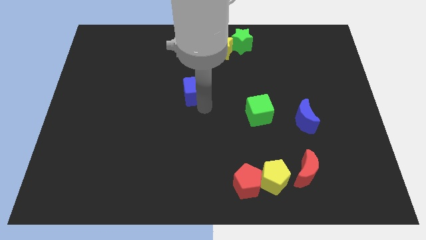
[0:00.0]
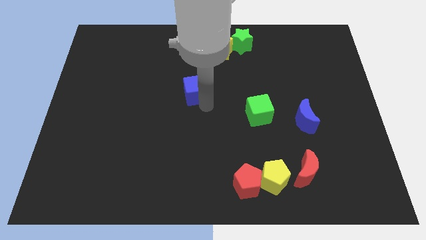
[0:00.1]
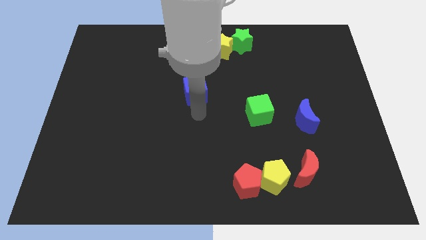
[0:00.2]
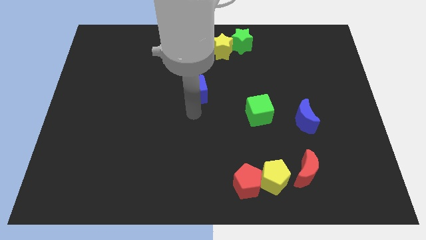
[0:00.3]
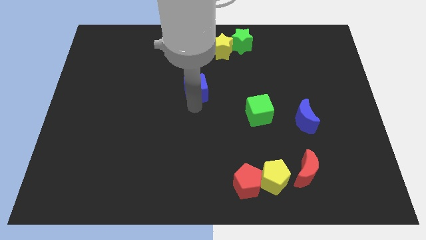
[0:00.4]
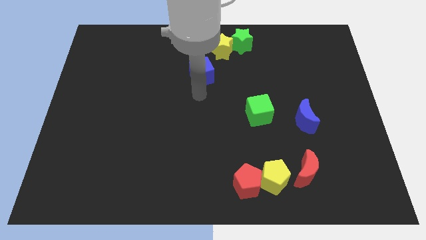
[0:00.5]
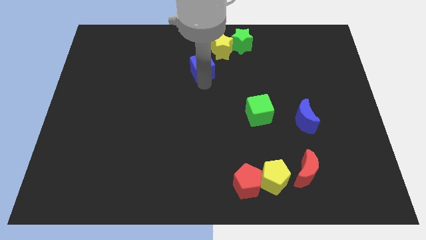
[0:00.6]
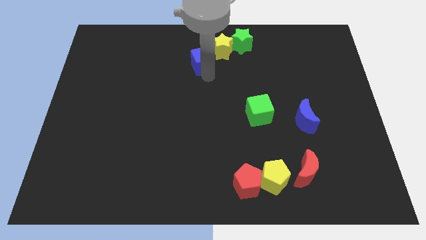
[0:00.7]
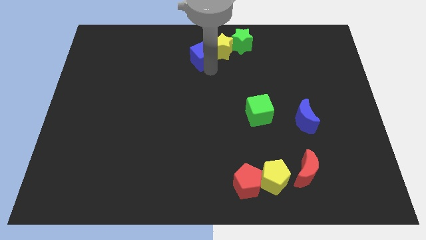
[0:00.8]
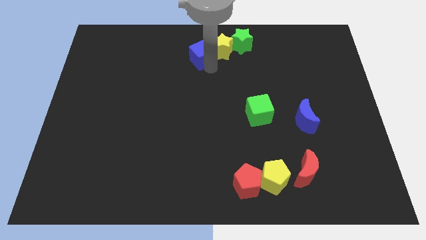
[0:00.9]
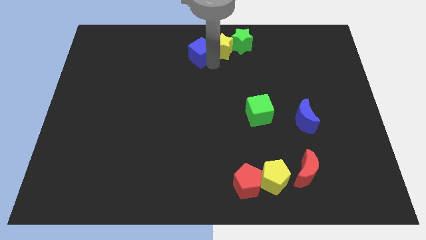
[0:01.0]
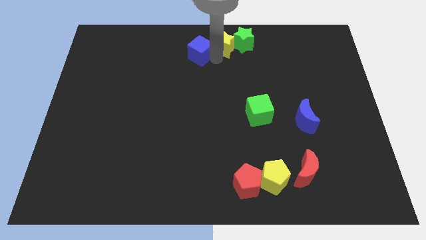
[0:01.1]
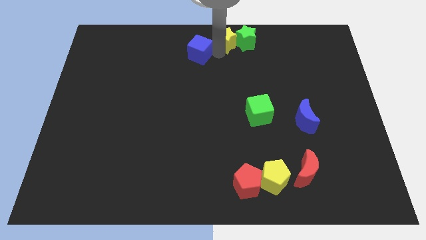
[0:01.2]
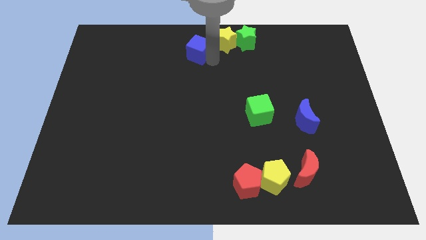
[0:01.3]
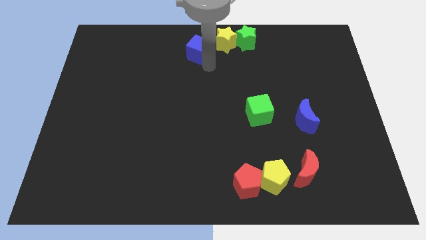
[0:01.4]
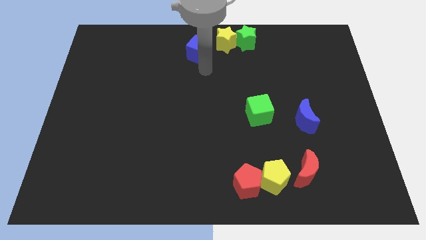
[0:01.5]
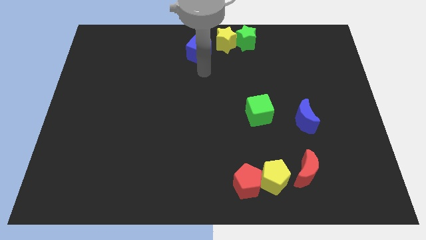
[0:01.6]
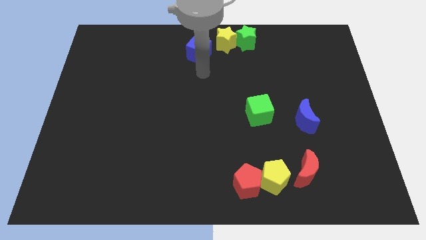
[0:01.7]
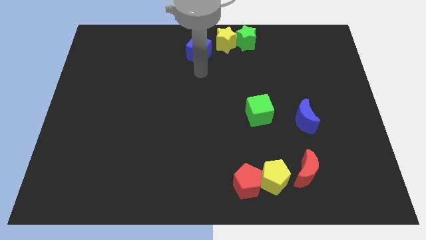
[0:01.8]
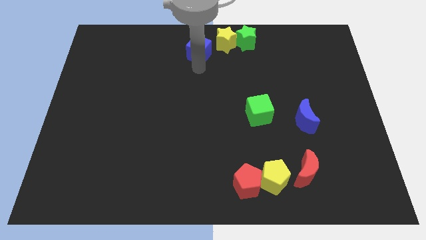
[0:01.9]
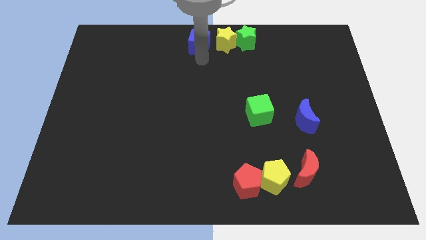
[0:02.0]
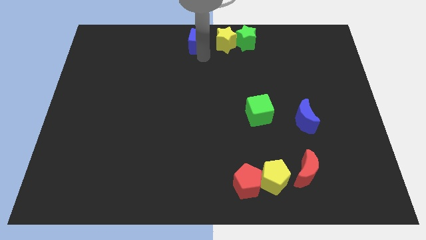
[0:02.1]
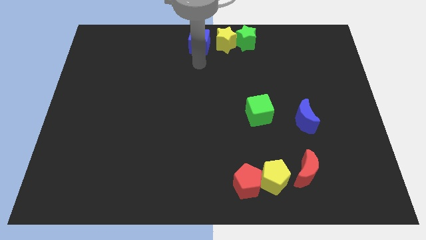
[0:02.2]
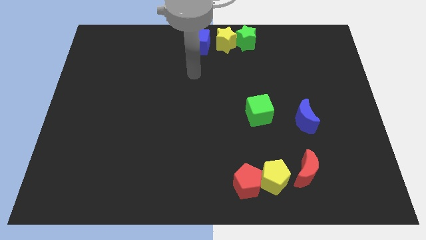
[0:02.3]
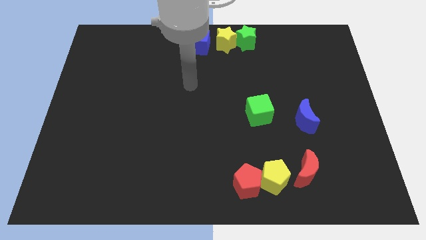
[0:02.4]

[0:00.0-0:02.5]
place the blue cube left to the yellow star

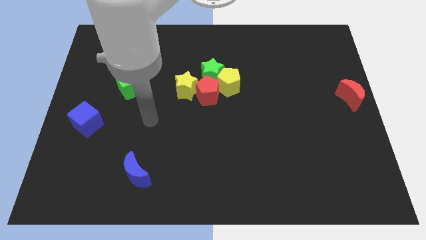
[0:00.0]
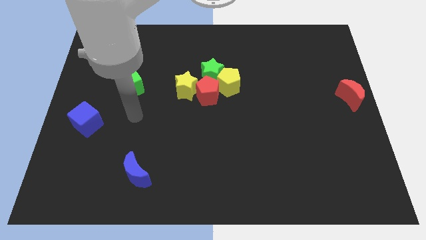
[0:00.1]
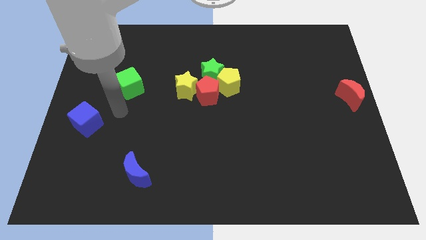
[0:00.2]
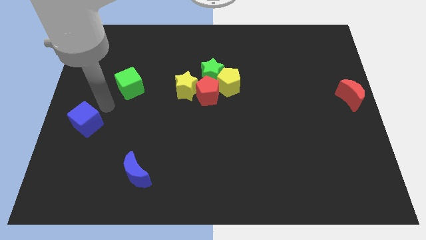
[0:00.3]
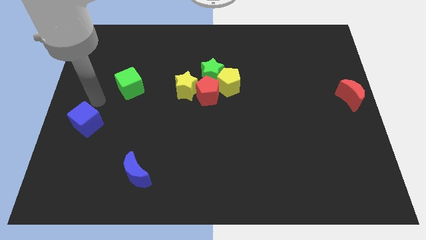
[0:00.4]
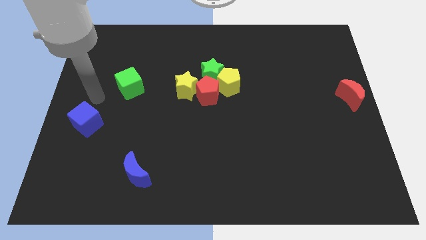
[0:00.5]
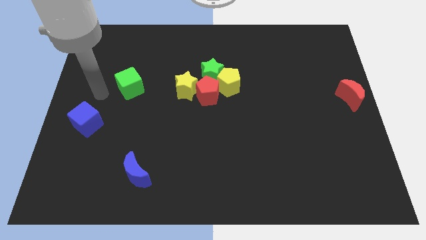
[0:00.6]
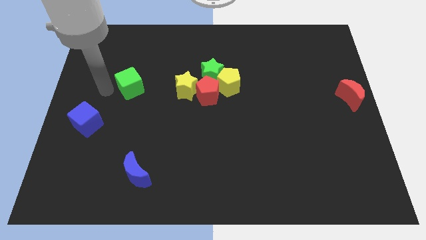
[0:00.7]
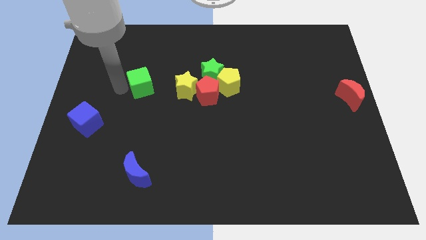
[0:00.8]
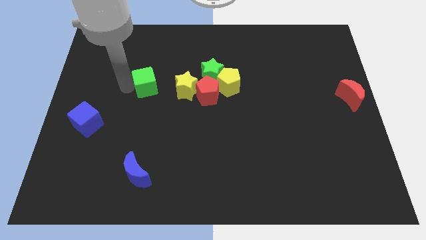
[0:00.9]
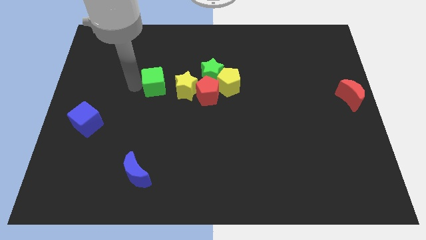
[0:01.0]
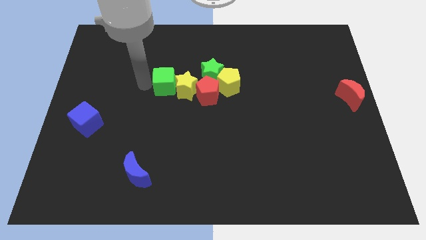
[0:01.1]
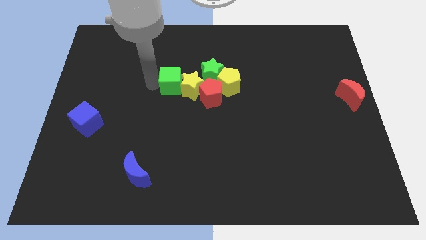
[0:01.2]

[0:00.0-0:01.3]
place green cube to the left of yellow star

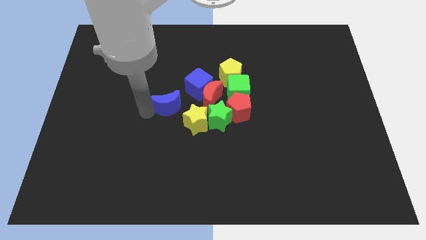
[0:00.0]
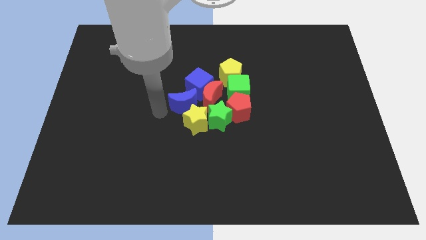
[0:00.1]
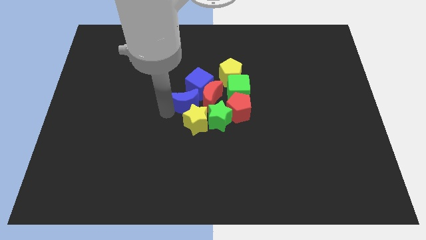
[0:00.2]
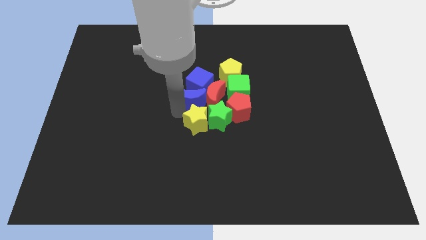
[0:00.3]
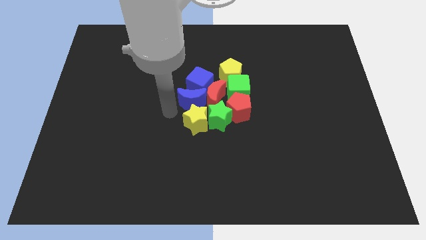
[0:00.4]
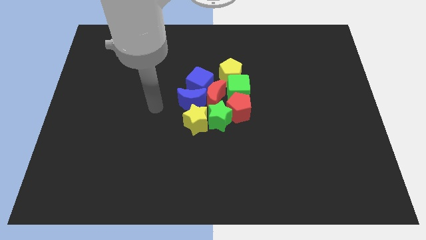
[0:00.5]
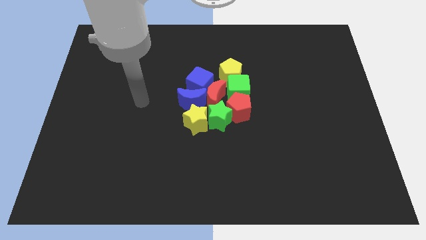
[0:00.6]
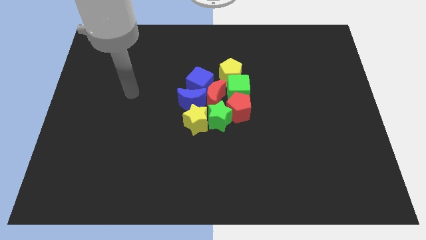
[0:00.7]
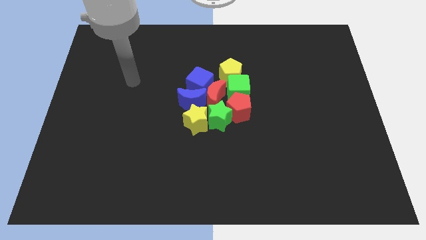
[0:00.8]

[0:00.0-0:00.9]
push blue moon into group of blocks

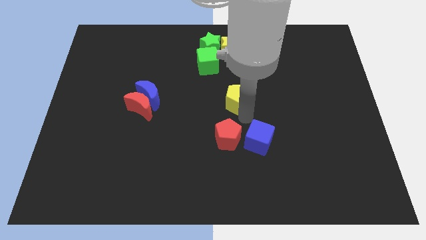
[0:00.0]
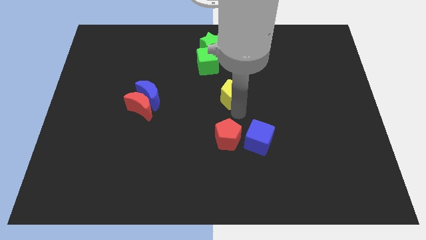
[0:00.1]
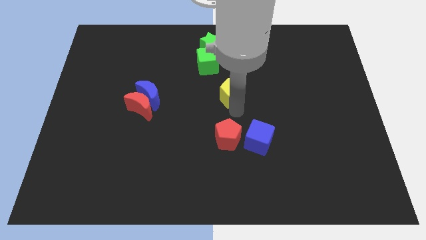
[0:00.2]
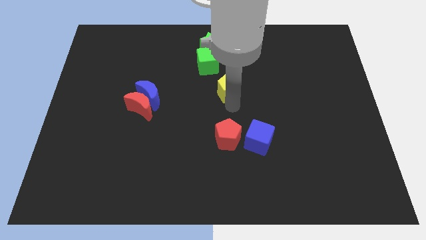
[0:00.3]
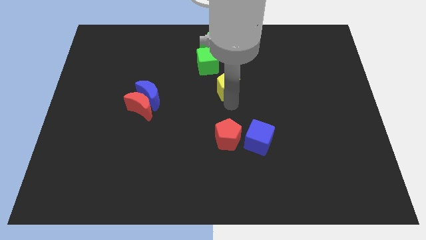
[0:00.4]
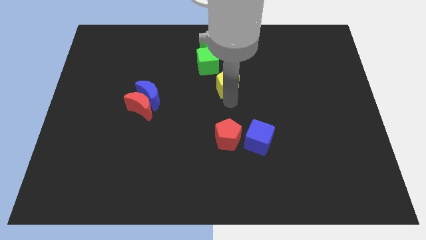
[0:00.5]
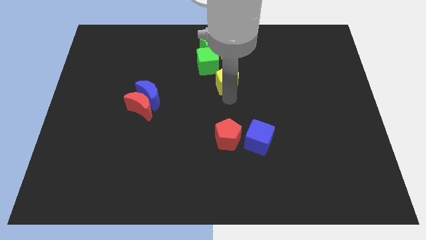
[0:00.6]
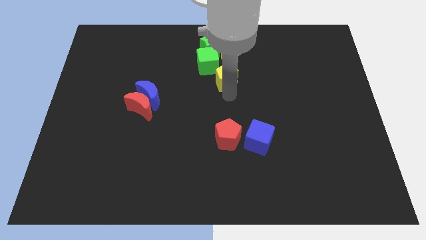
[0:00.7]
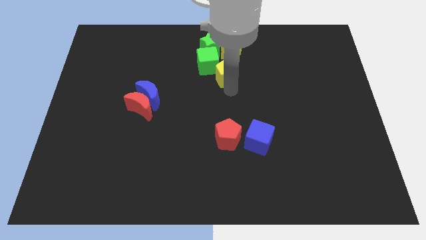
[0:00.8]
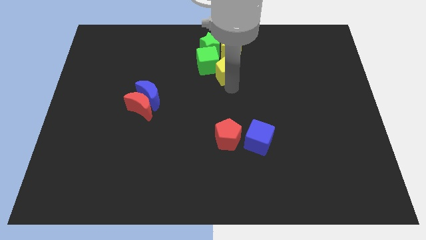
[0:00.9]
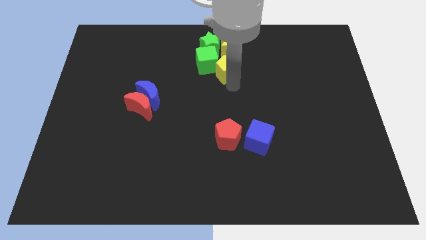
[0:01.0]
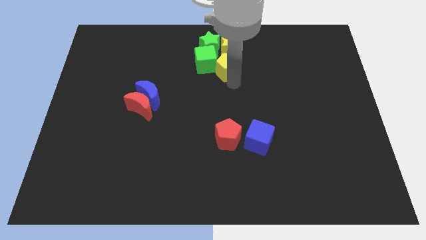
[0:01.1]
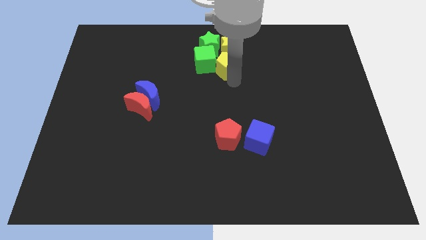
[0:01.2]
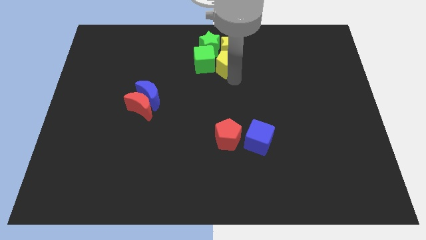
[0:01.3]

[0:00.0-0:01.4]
push the yellow pentagon into the green cube

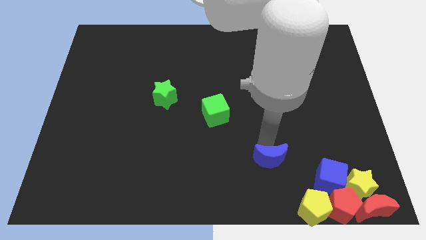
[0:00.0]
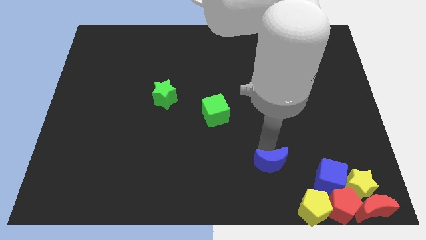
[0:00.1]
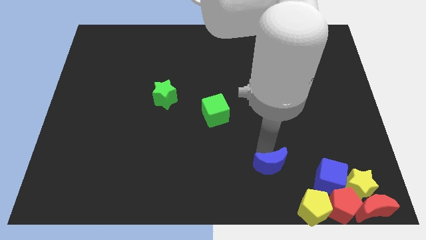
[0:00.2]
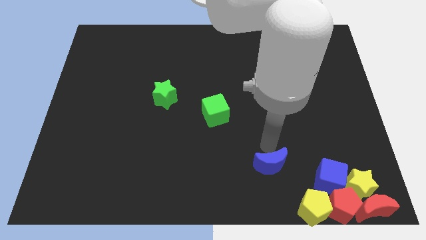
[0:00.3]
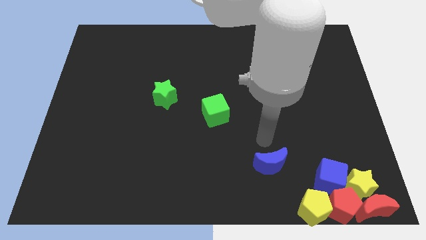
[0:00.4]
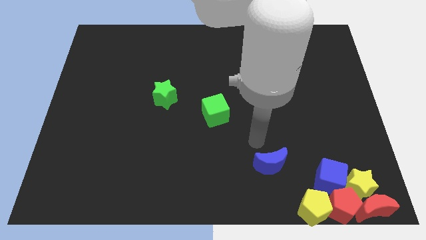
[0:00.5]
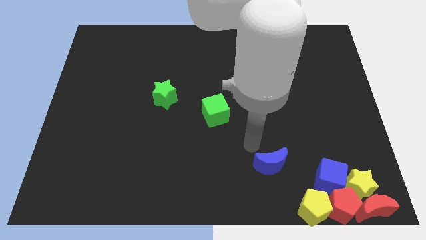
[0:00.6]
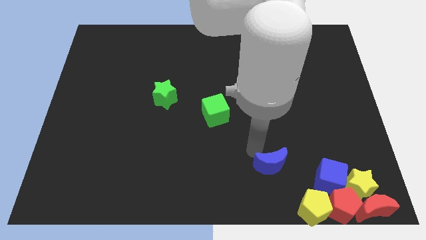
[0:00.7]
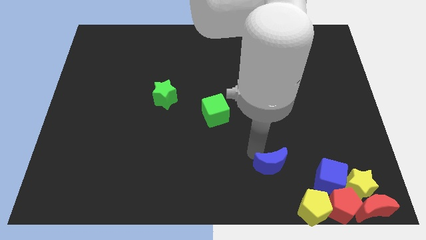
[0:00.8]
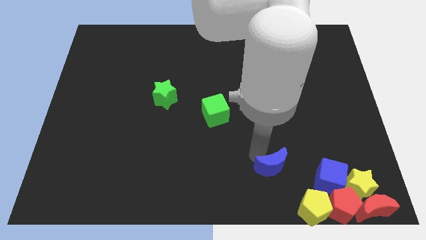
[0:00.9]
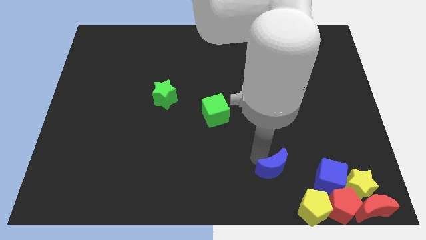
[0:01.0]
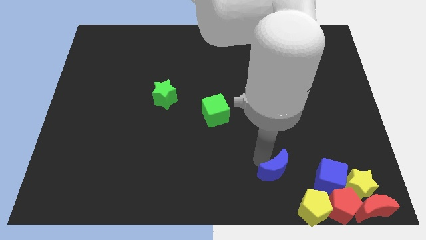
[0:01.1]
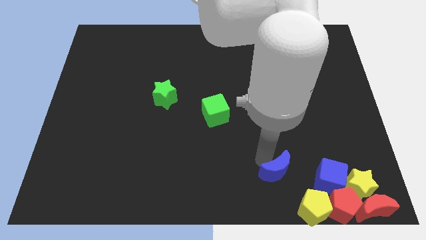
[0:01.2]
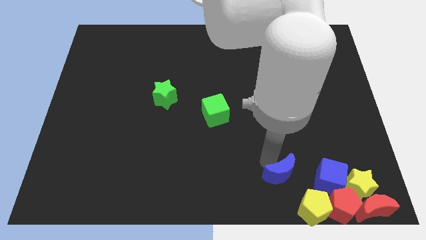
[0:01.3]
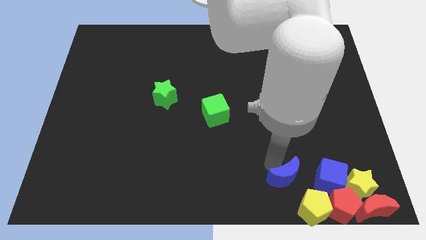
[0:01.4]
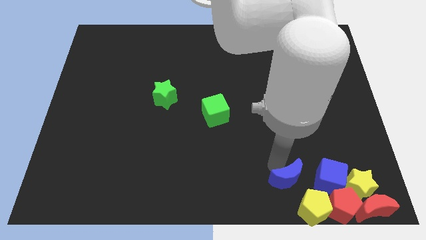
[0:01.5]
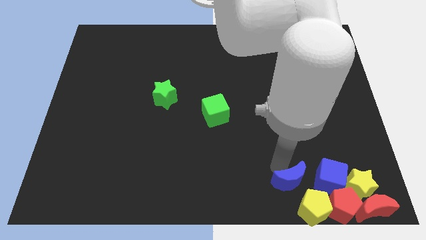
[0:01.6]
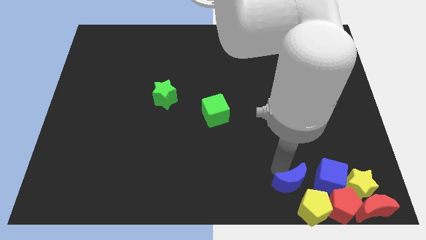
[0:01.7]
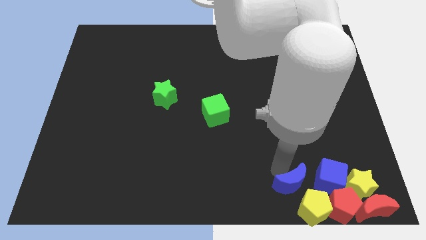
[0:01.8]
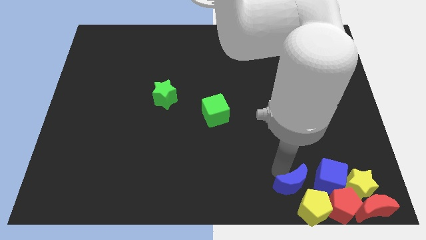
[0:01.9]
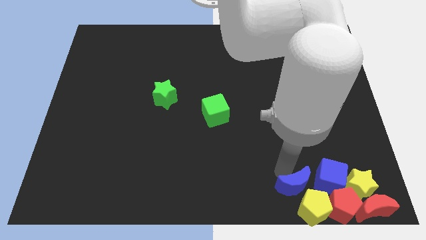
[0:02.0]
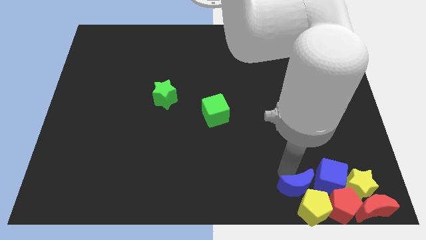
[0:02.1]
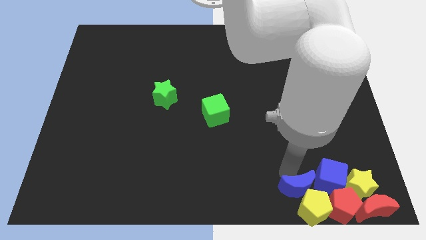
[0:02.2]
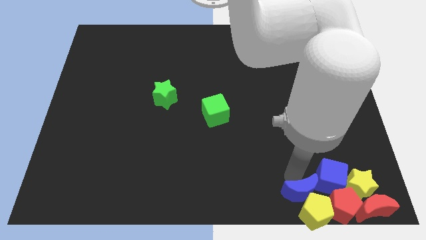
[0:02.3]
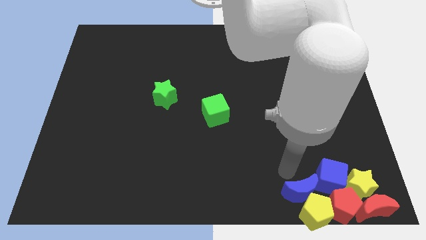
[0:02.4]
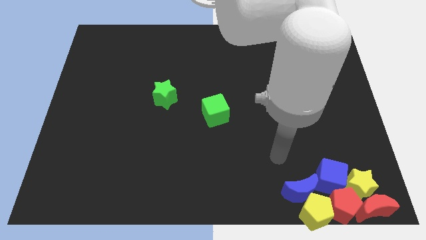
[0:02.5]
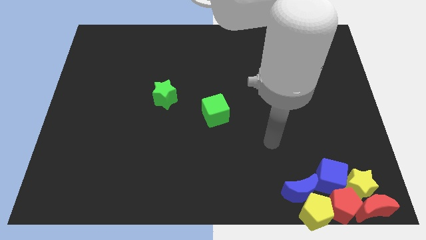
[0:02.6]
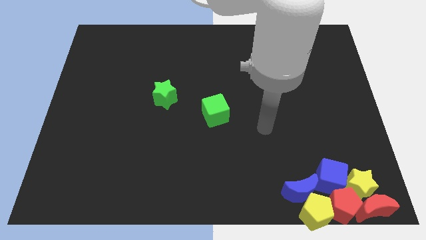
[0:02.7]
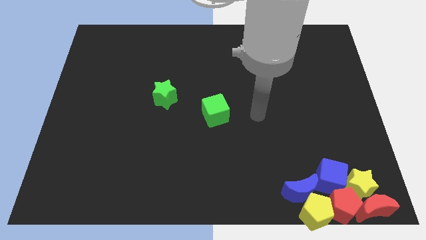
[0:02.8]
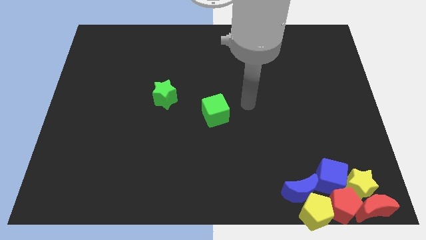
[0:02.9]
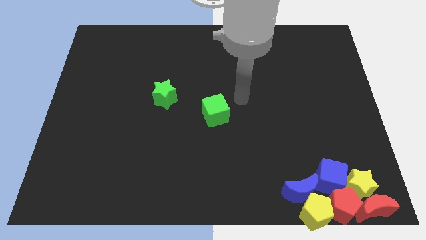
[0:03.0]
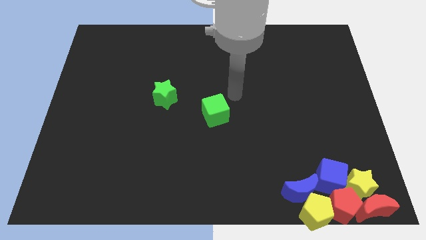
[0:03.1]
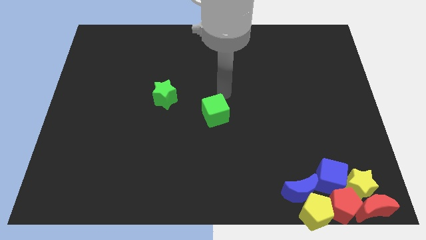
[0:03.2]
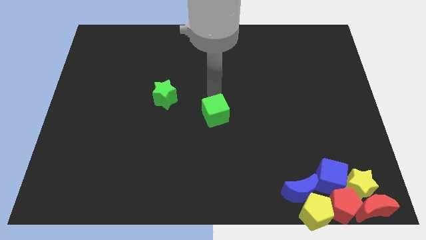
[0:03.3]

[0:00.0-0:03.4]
place the blue moon at the bottom right
